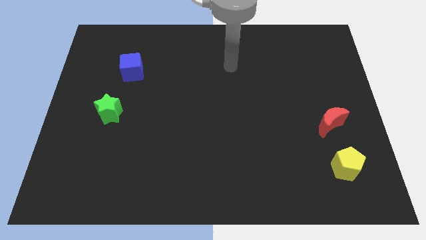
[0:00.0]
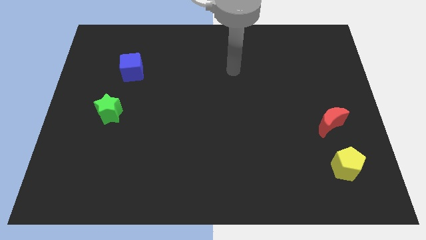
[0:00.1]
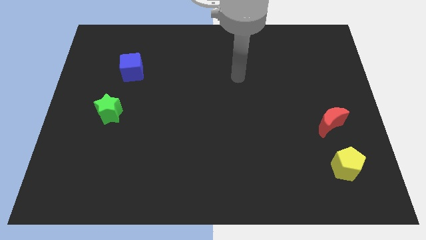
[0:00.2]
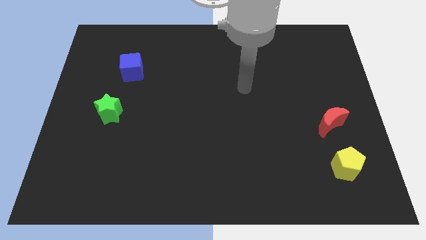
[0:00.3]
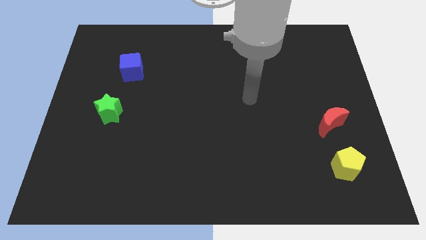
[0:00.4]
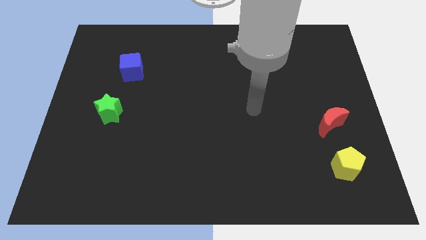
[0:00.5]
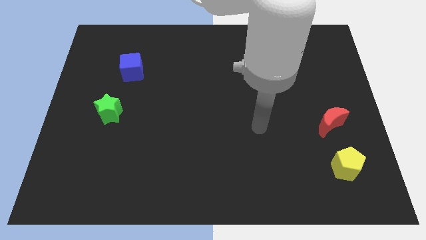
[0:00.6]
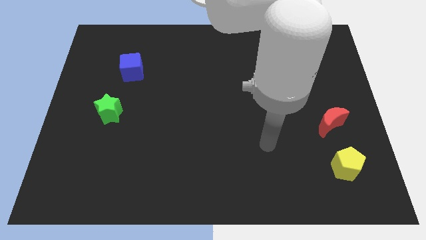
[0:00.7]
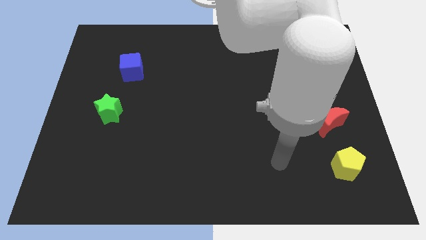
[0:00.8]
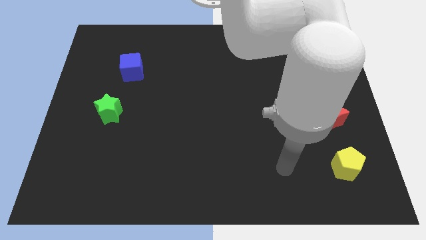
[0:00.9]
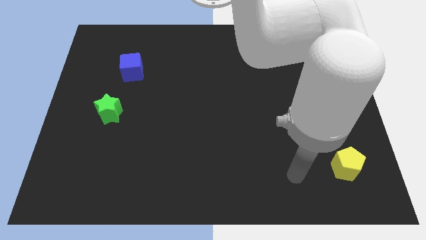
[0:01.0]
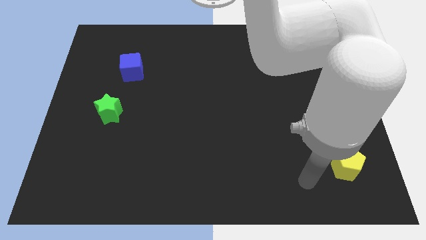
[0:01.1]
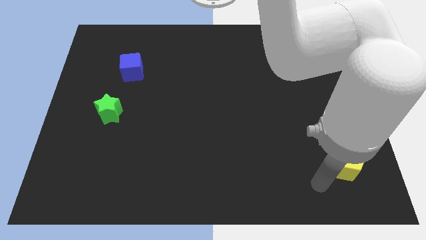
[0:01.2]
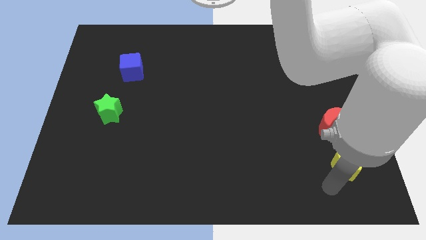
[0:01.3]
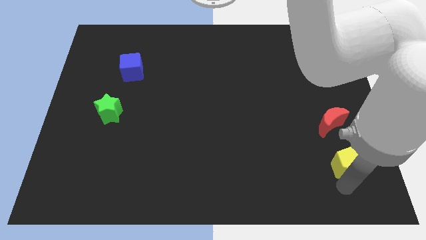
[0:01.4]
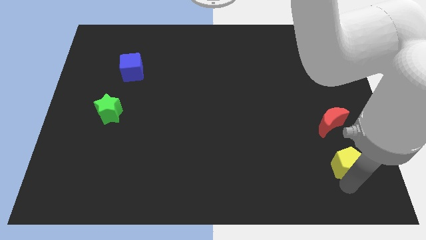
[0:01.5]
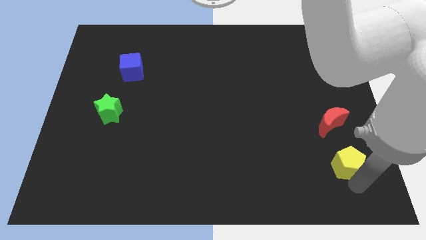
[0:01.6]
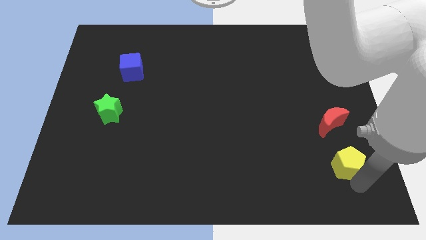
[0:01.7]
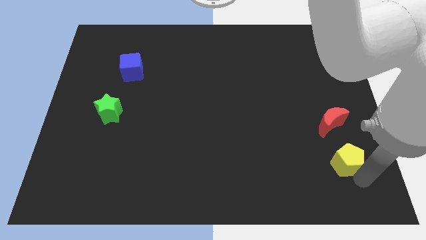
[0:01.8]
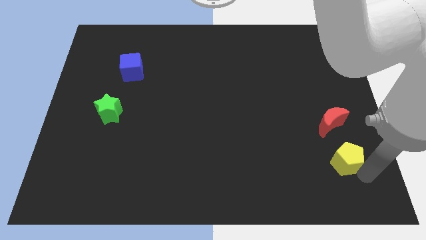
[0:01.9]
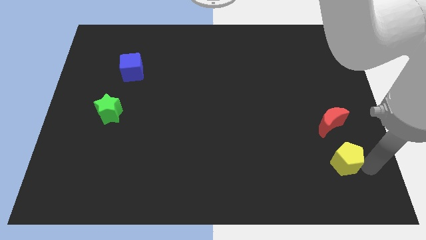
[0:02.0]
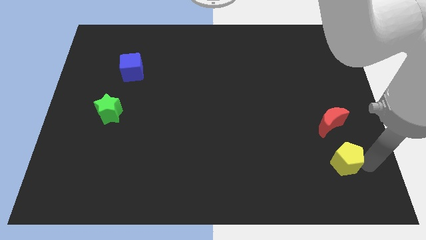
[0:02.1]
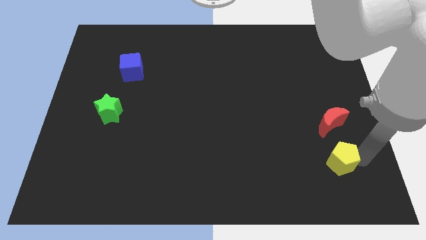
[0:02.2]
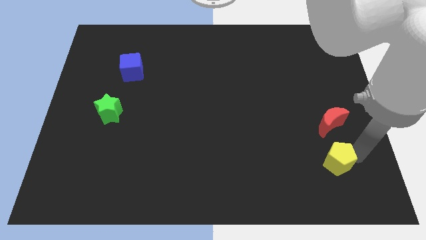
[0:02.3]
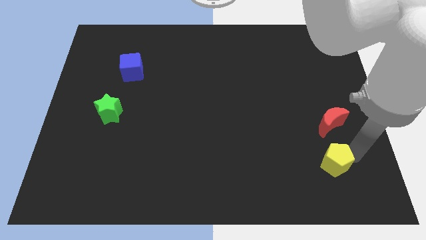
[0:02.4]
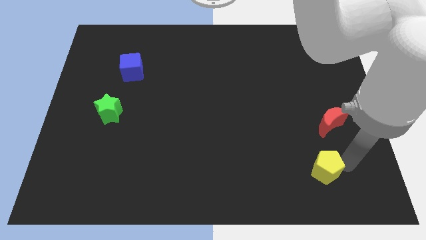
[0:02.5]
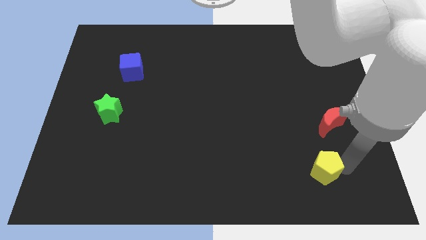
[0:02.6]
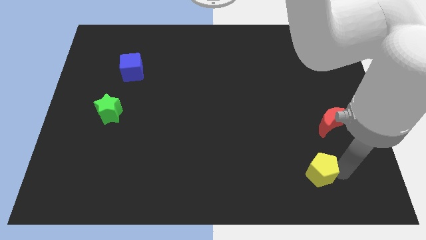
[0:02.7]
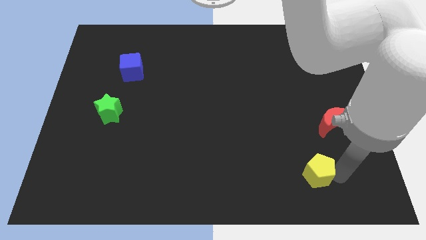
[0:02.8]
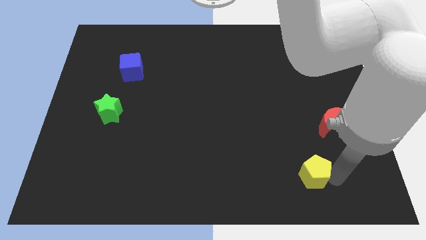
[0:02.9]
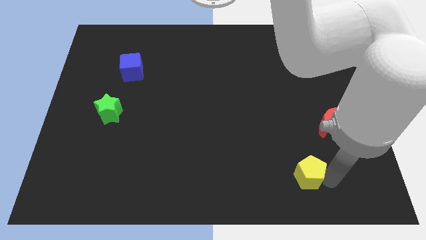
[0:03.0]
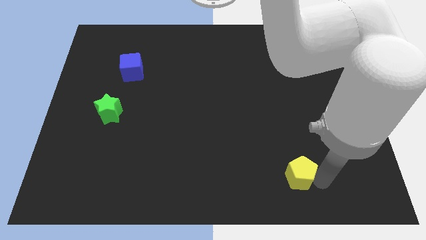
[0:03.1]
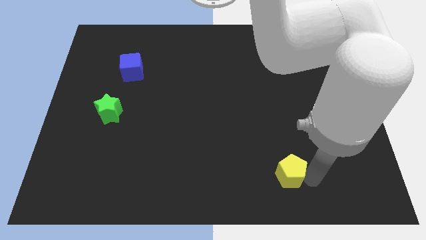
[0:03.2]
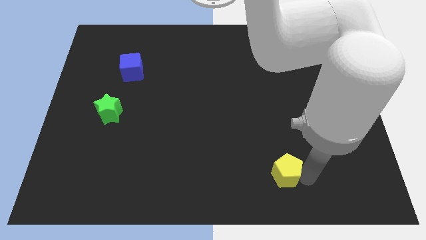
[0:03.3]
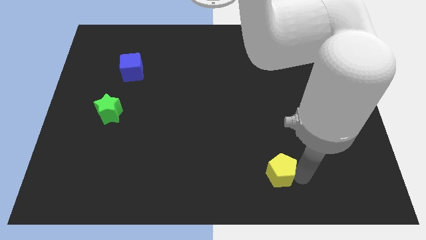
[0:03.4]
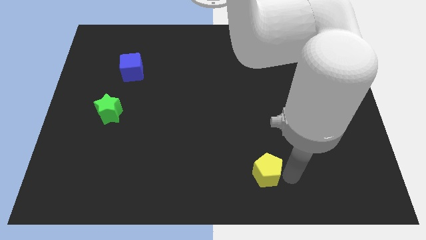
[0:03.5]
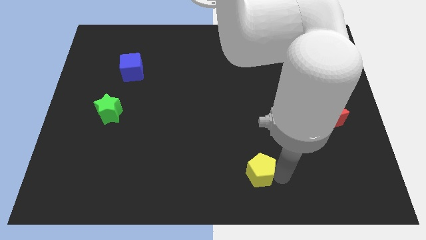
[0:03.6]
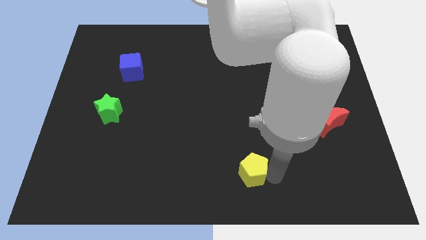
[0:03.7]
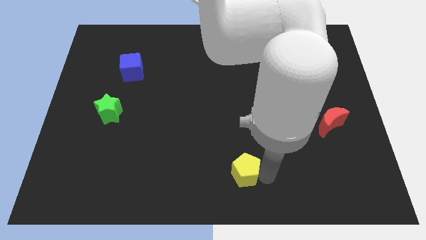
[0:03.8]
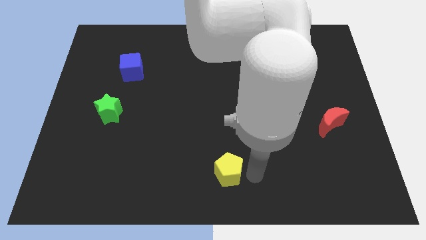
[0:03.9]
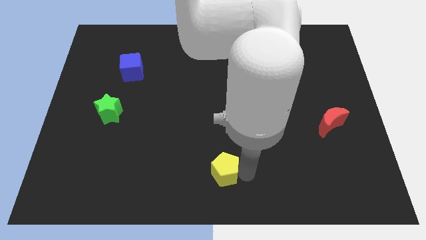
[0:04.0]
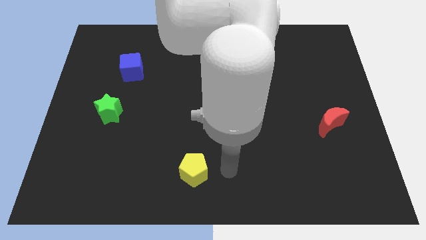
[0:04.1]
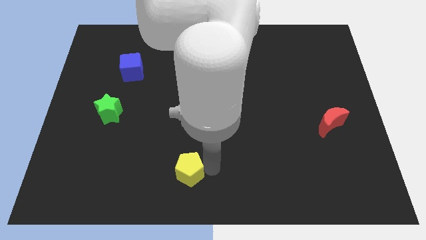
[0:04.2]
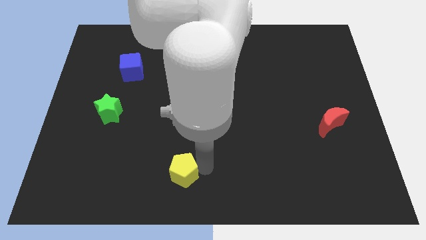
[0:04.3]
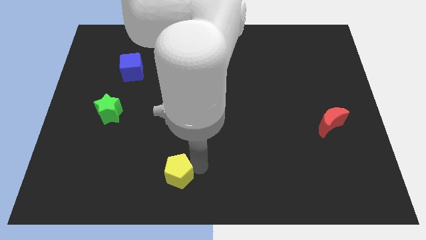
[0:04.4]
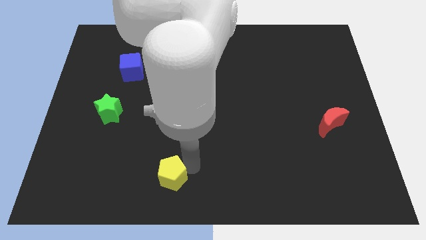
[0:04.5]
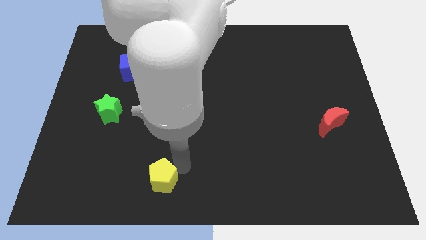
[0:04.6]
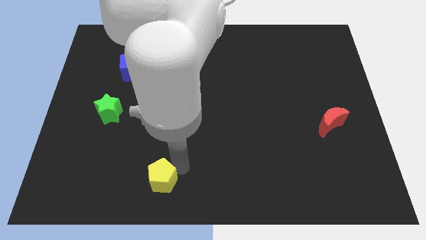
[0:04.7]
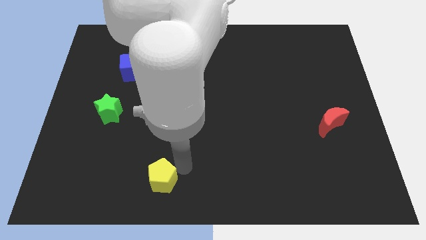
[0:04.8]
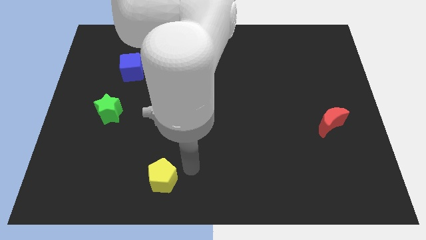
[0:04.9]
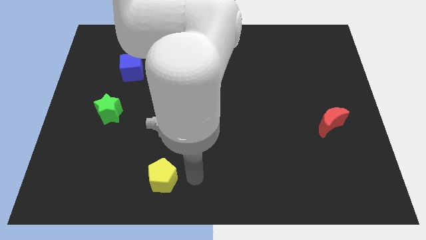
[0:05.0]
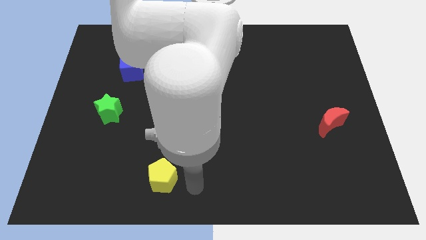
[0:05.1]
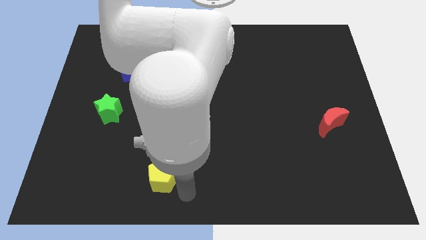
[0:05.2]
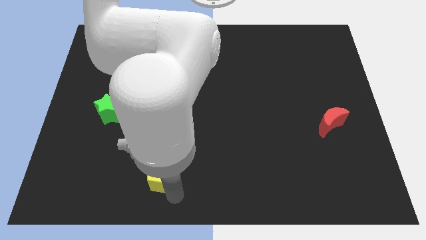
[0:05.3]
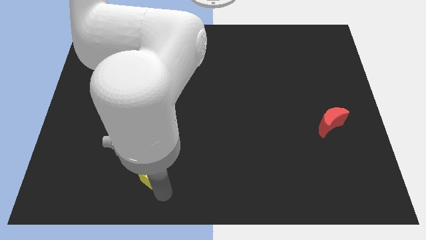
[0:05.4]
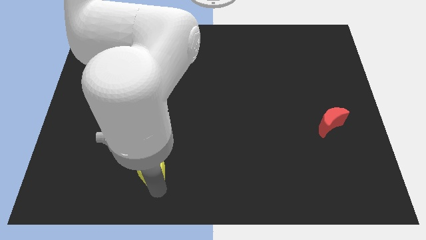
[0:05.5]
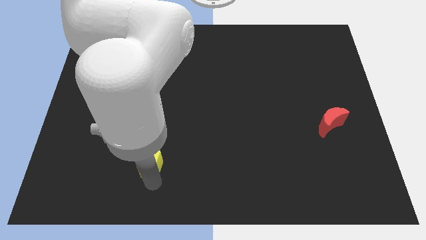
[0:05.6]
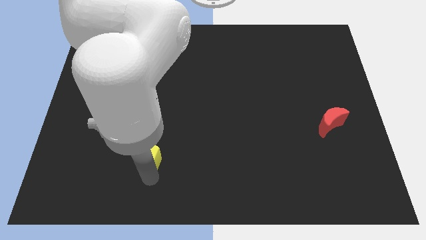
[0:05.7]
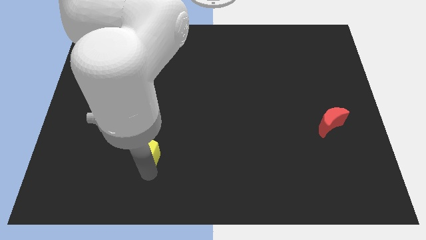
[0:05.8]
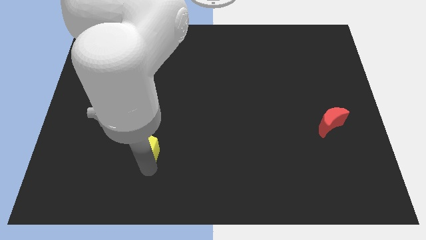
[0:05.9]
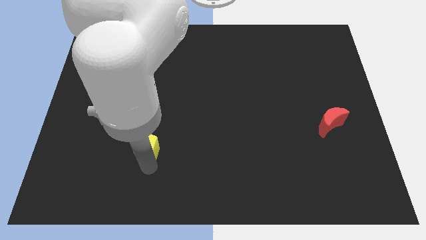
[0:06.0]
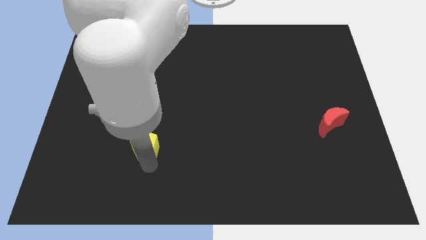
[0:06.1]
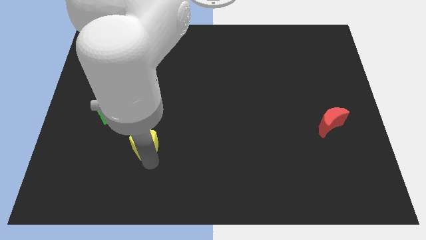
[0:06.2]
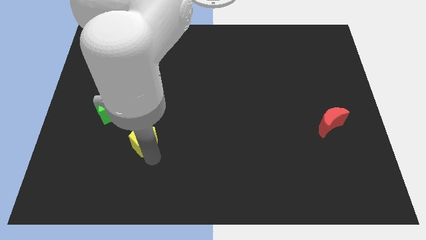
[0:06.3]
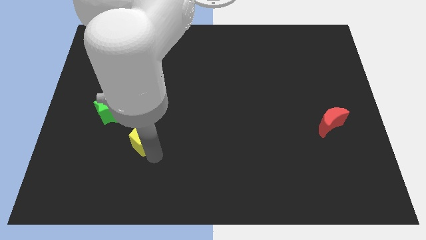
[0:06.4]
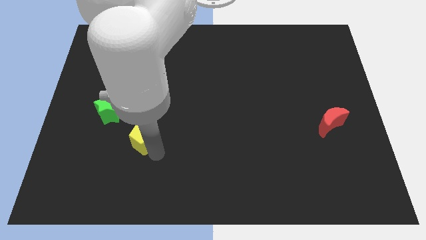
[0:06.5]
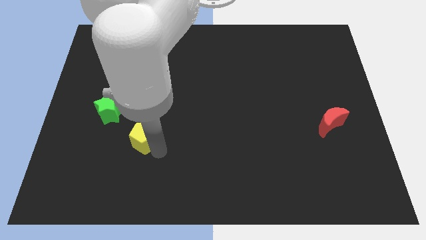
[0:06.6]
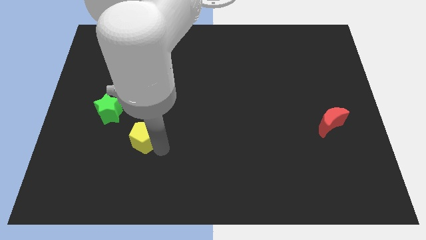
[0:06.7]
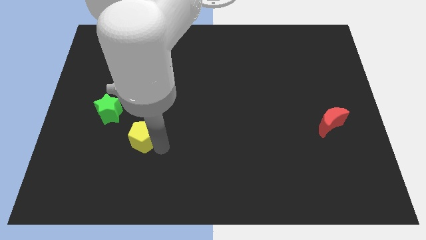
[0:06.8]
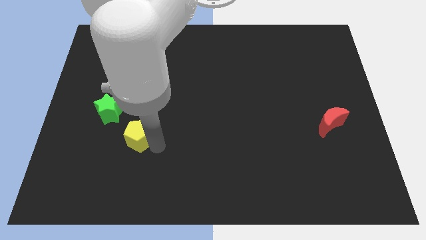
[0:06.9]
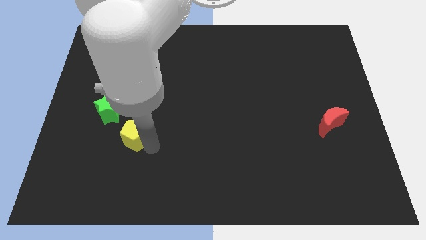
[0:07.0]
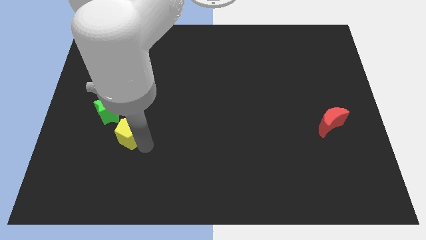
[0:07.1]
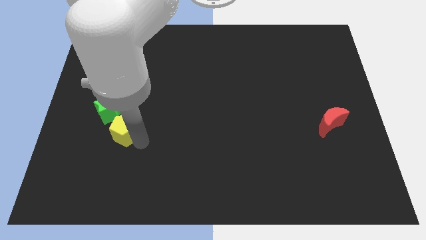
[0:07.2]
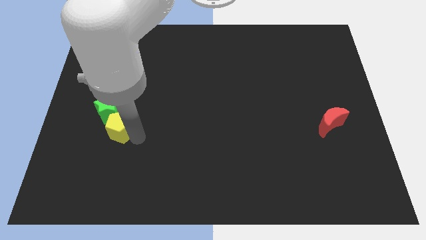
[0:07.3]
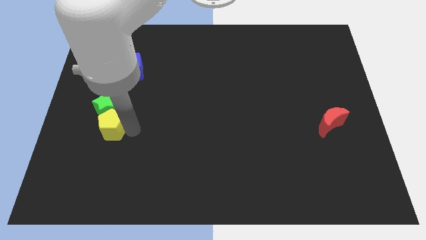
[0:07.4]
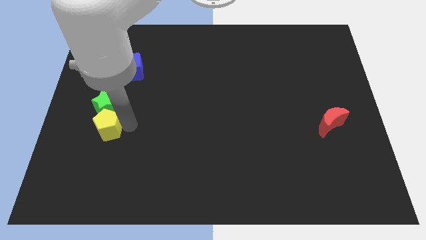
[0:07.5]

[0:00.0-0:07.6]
slide the pentagon towards the star

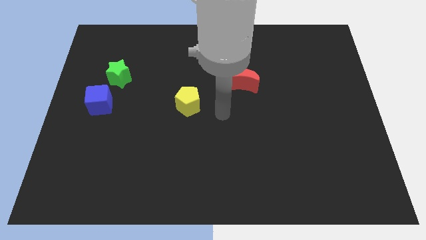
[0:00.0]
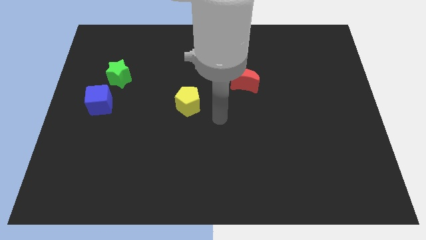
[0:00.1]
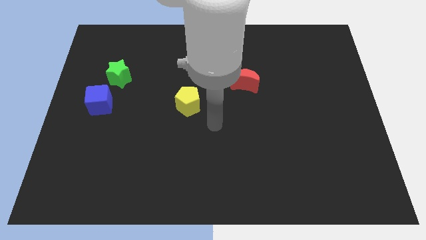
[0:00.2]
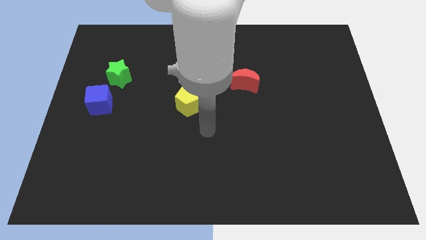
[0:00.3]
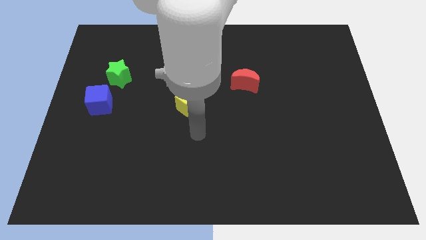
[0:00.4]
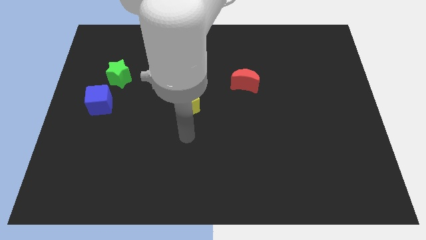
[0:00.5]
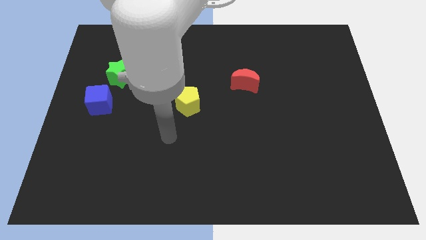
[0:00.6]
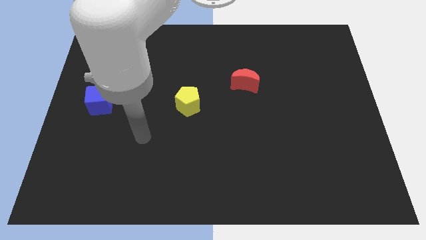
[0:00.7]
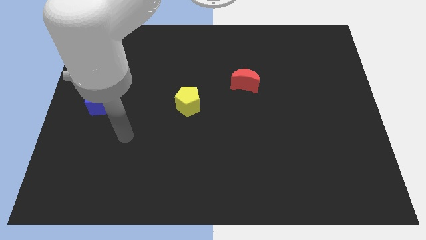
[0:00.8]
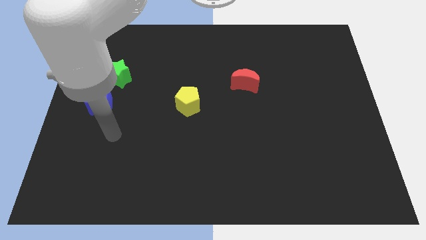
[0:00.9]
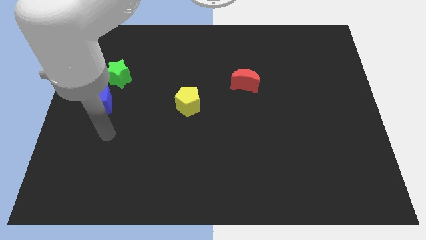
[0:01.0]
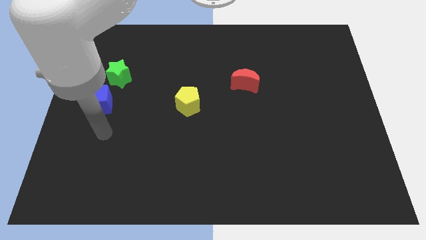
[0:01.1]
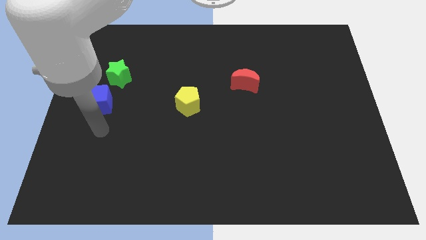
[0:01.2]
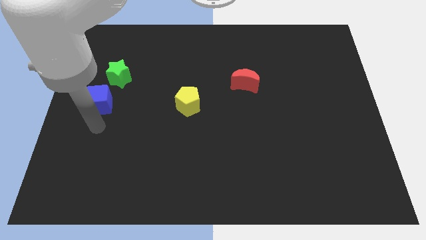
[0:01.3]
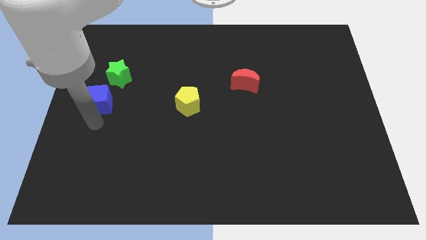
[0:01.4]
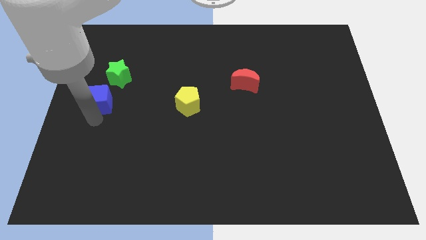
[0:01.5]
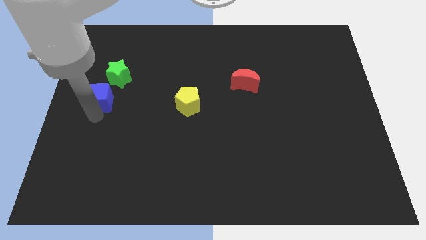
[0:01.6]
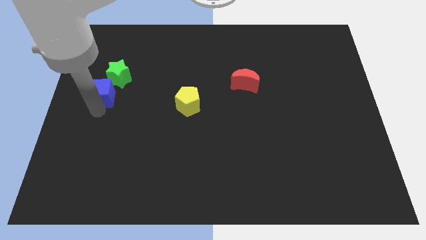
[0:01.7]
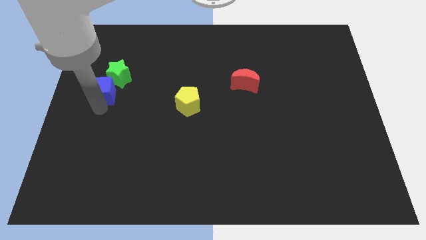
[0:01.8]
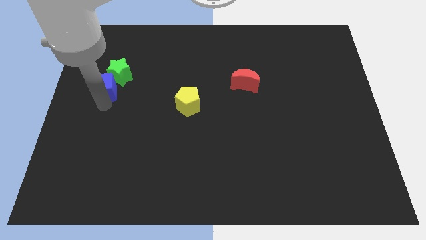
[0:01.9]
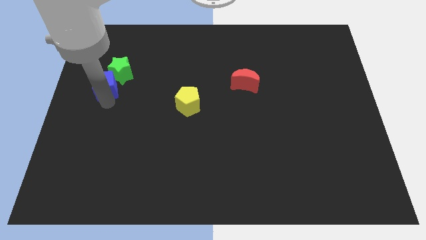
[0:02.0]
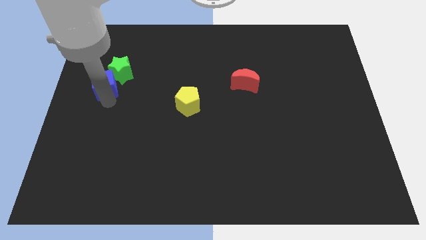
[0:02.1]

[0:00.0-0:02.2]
put the cube close to the star
